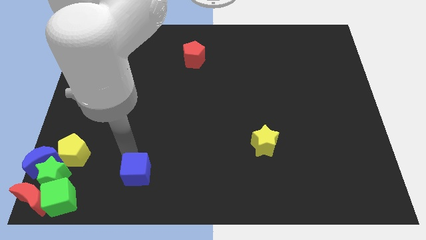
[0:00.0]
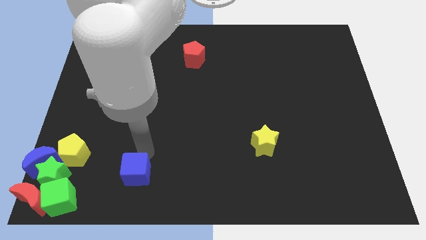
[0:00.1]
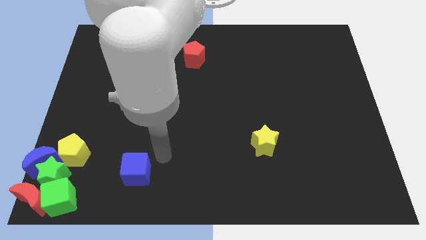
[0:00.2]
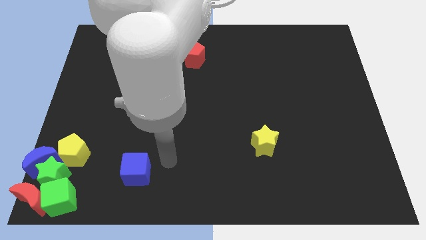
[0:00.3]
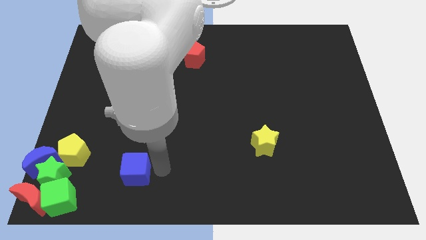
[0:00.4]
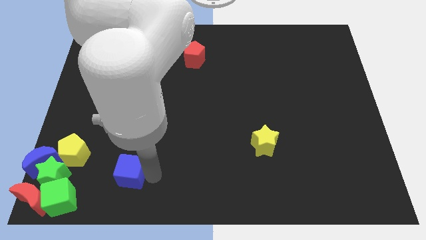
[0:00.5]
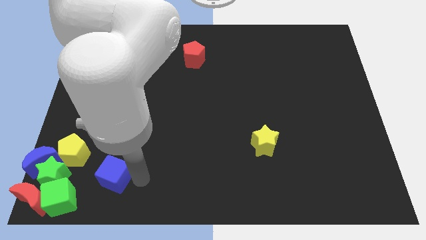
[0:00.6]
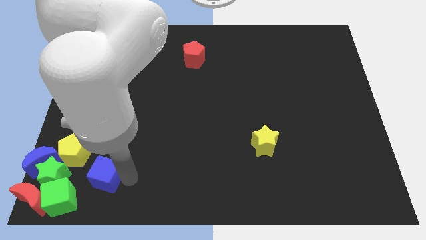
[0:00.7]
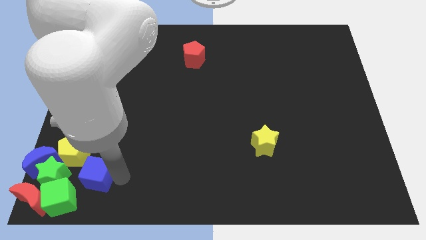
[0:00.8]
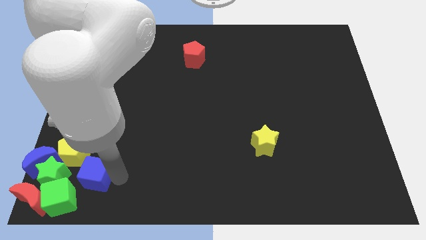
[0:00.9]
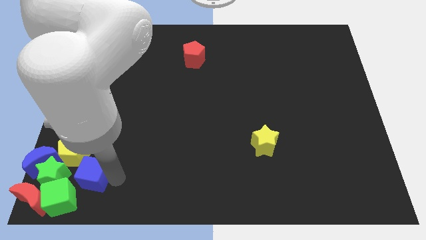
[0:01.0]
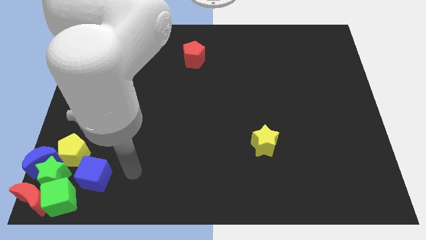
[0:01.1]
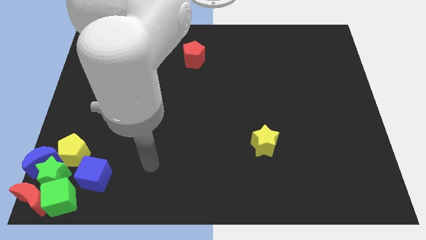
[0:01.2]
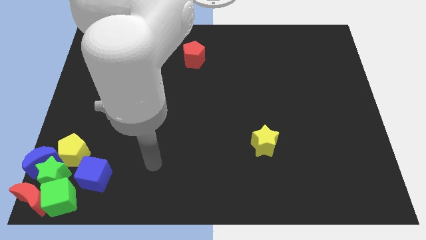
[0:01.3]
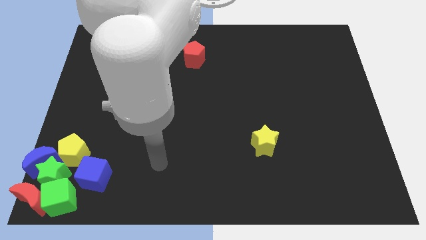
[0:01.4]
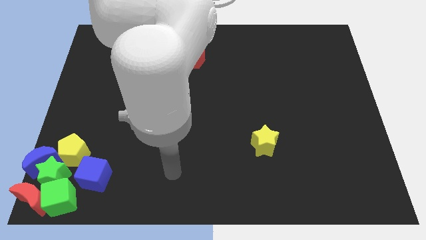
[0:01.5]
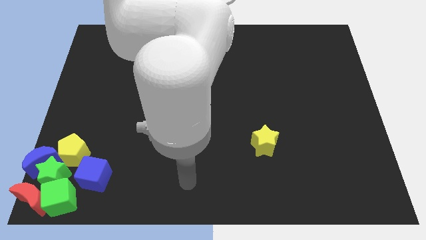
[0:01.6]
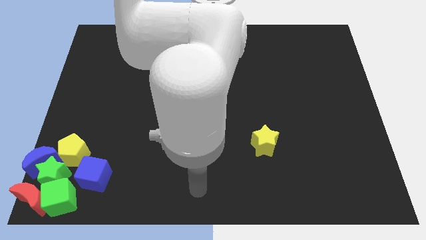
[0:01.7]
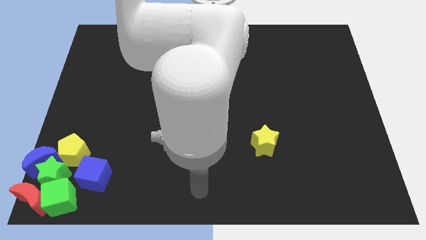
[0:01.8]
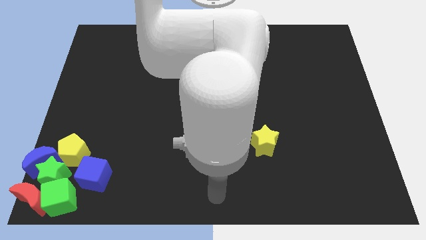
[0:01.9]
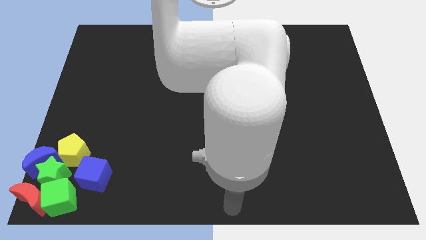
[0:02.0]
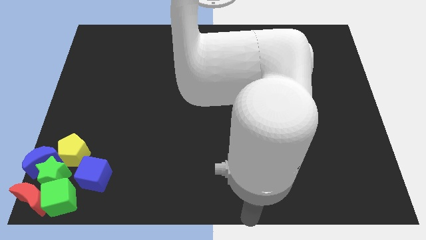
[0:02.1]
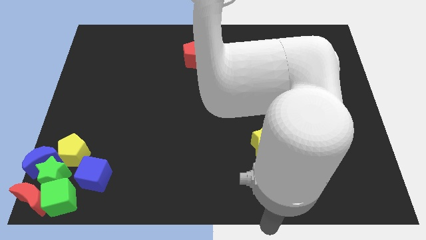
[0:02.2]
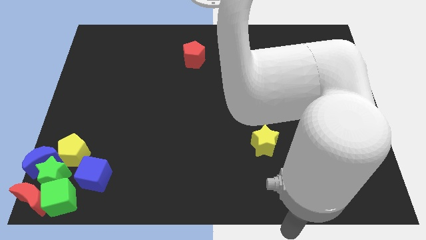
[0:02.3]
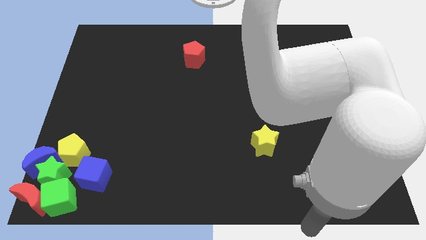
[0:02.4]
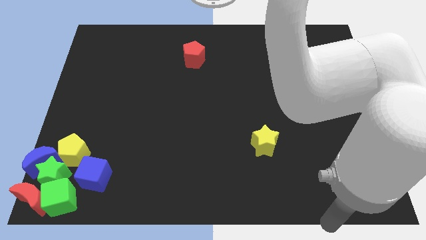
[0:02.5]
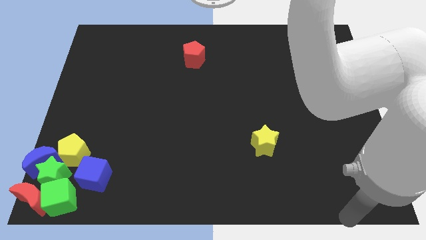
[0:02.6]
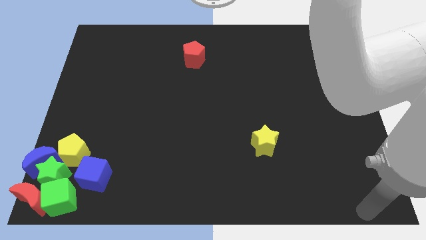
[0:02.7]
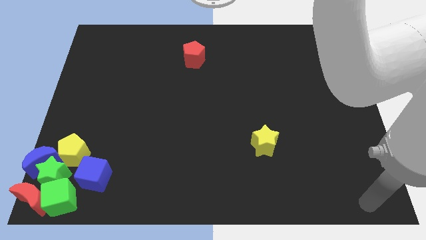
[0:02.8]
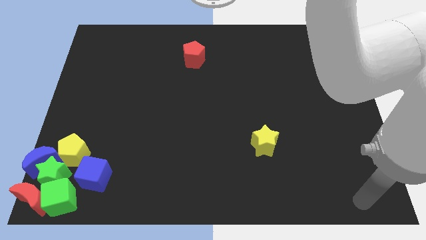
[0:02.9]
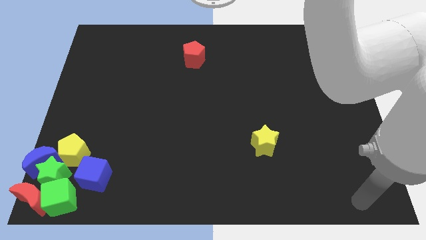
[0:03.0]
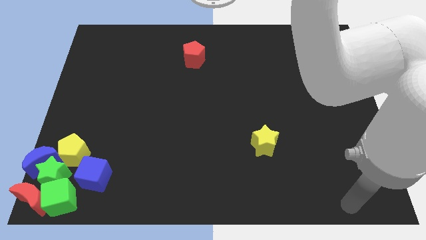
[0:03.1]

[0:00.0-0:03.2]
place the arm to the bottom left of the board

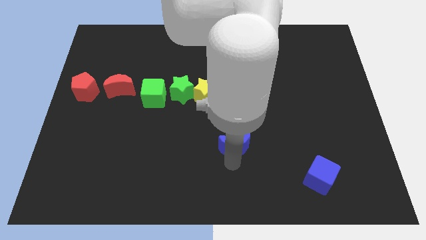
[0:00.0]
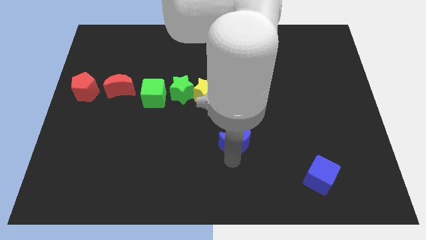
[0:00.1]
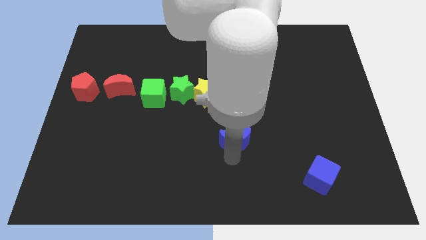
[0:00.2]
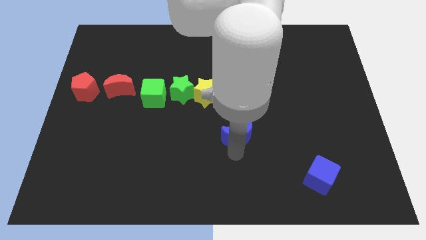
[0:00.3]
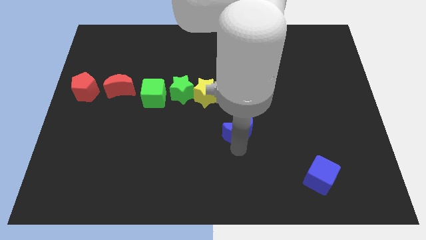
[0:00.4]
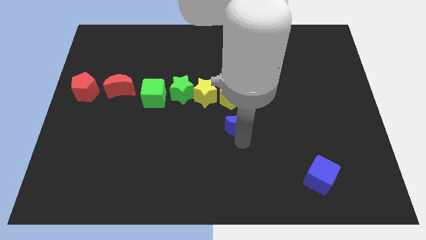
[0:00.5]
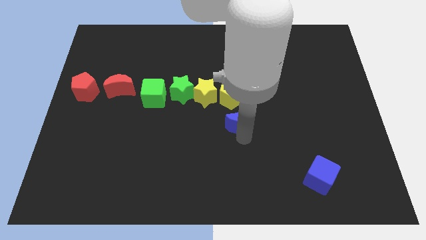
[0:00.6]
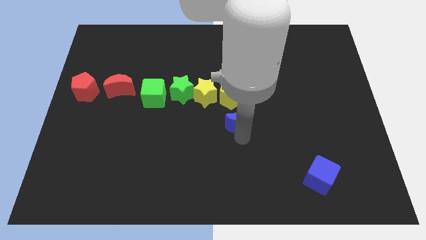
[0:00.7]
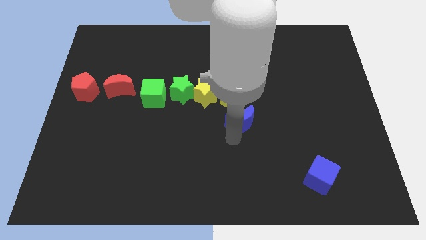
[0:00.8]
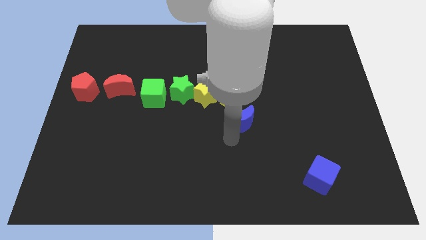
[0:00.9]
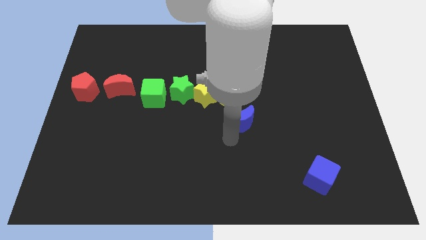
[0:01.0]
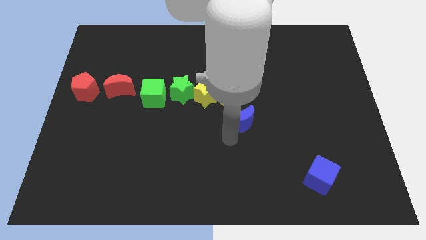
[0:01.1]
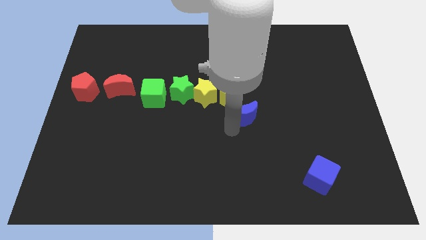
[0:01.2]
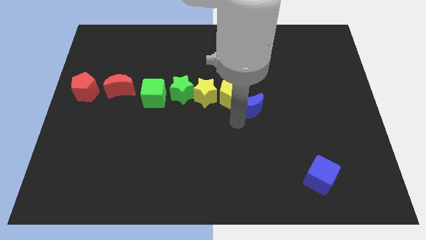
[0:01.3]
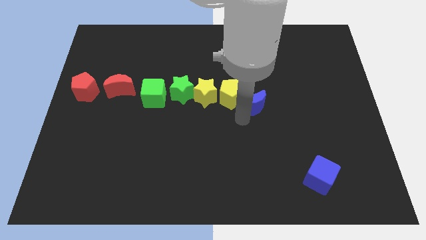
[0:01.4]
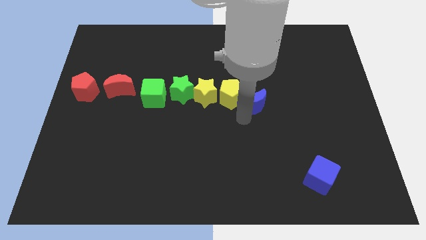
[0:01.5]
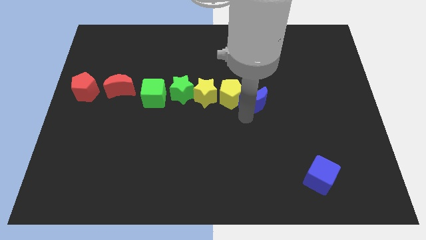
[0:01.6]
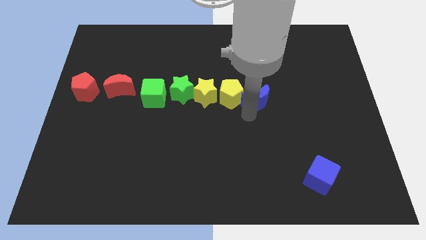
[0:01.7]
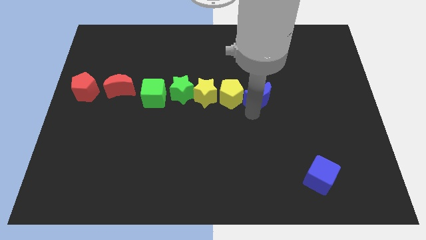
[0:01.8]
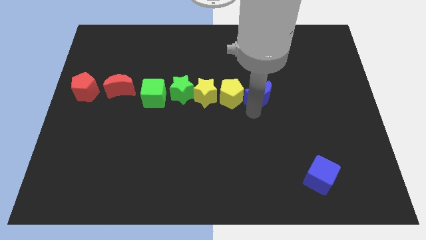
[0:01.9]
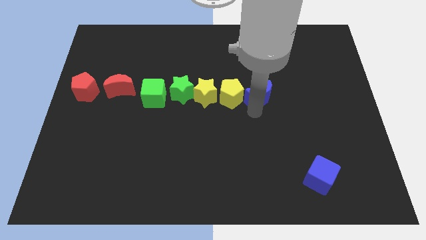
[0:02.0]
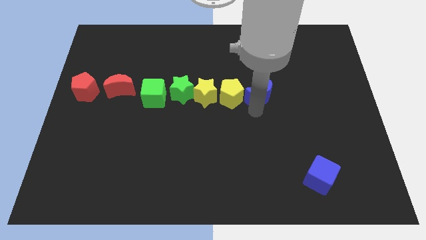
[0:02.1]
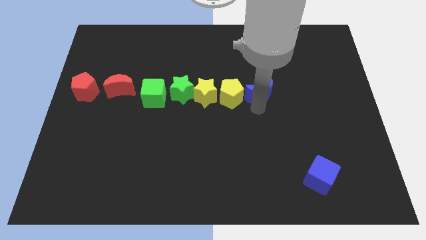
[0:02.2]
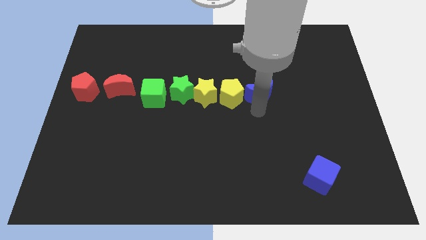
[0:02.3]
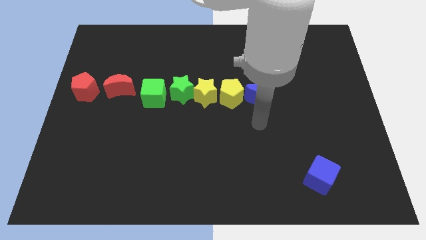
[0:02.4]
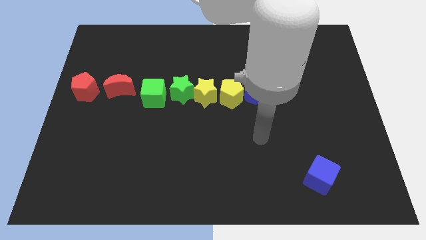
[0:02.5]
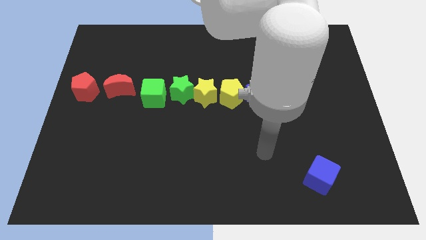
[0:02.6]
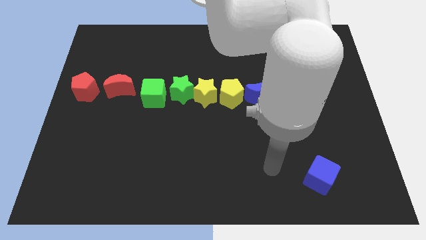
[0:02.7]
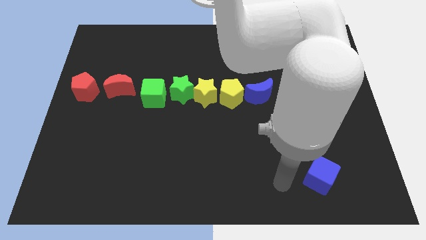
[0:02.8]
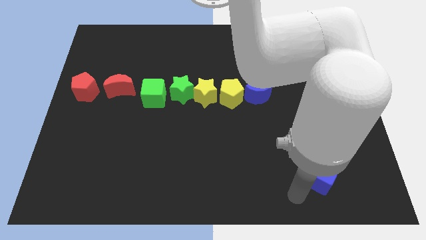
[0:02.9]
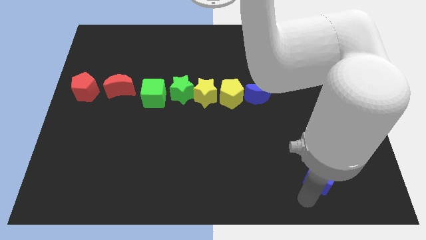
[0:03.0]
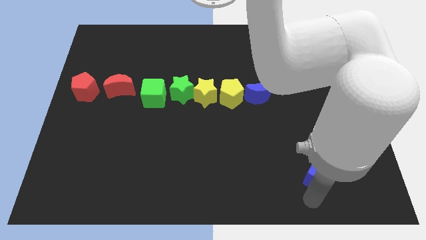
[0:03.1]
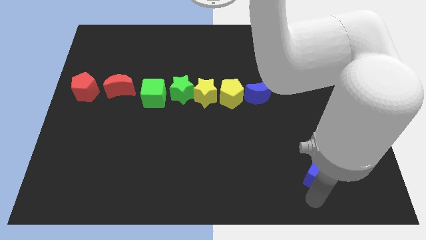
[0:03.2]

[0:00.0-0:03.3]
move the blue crescent to the right side of the yellow pentagon

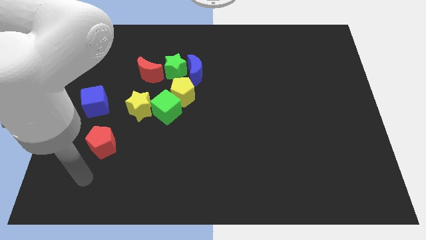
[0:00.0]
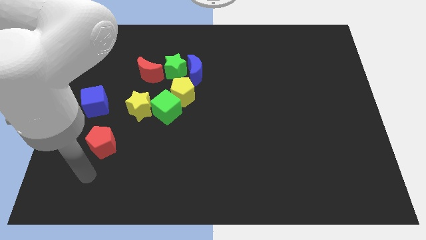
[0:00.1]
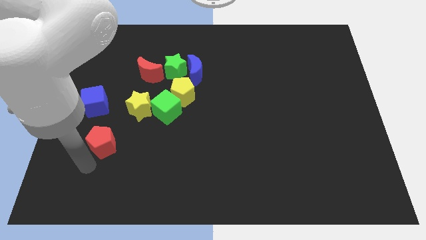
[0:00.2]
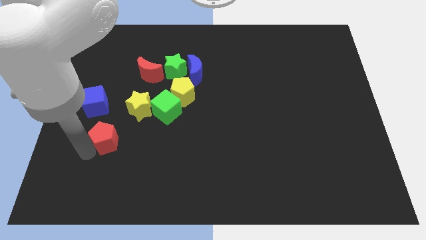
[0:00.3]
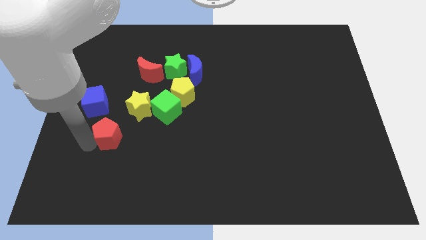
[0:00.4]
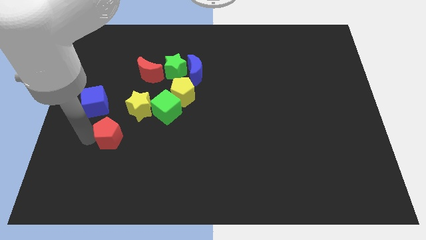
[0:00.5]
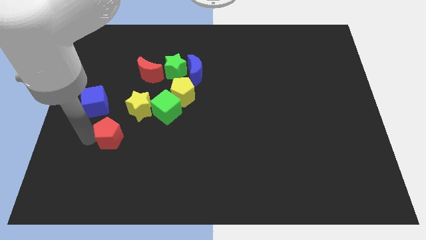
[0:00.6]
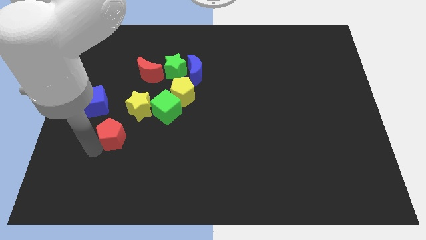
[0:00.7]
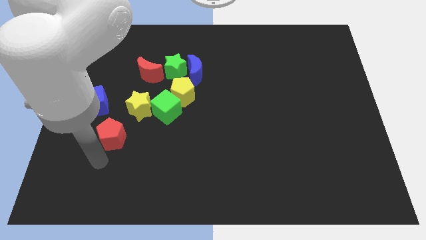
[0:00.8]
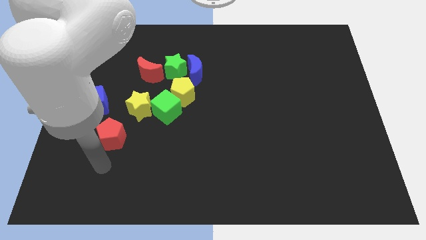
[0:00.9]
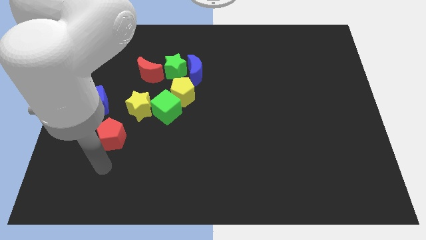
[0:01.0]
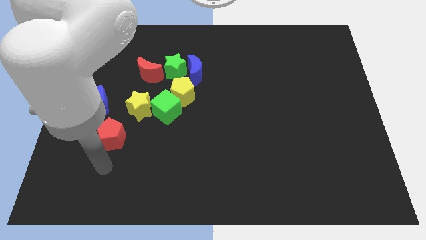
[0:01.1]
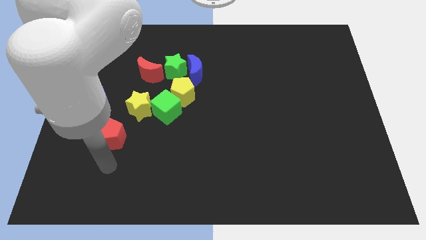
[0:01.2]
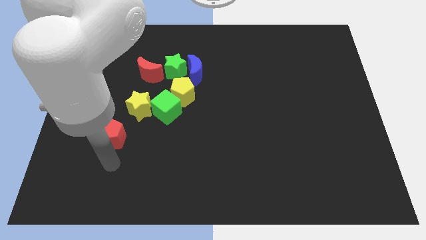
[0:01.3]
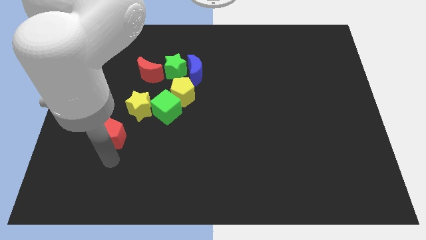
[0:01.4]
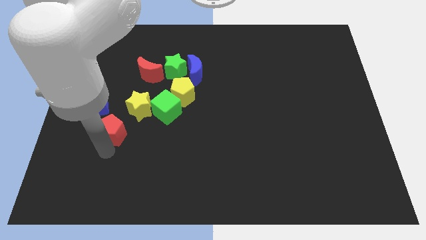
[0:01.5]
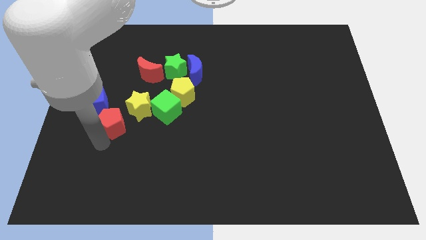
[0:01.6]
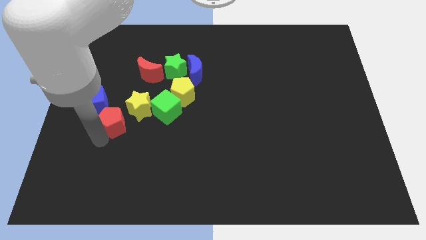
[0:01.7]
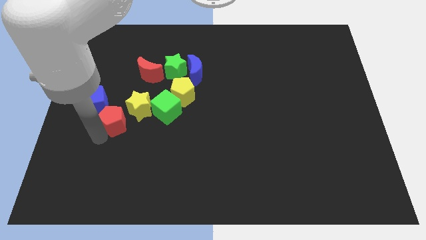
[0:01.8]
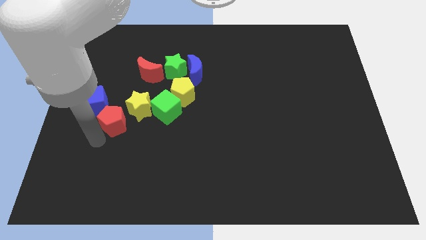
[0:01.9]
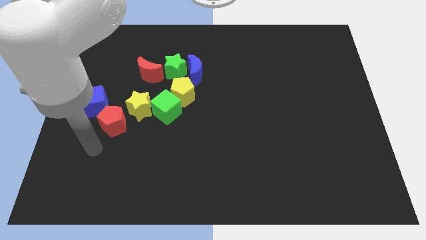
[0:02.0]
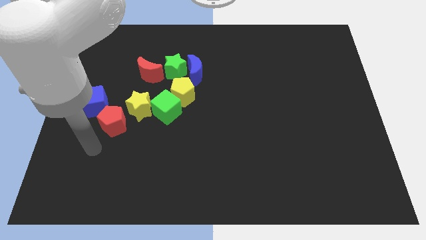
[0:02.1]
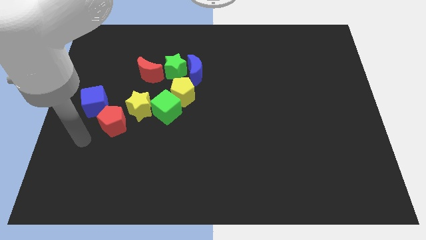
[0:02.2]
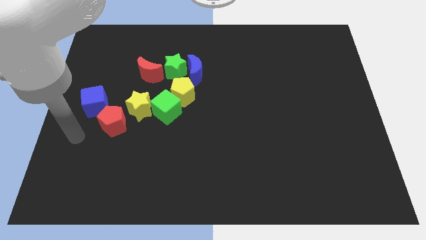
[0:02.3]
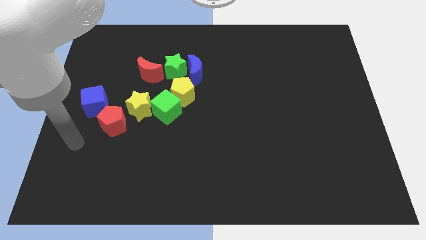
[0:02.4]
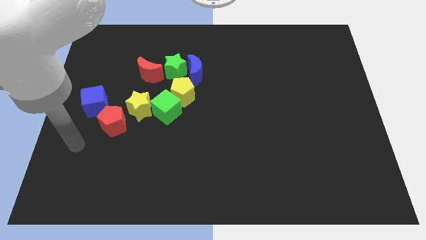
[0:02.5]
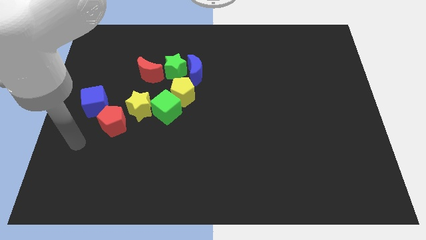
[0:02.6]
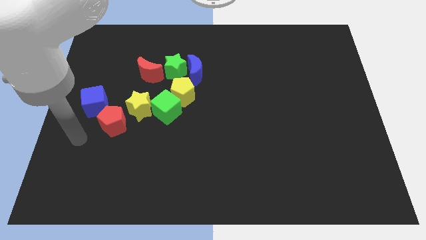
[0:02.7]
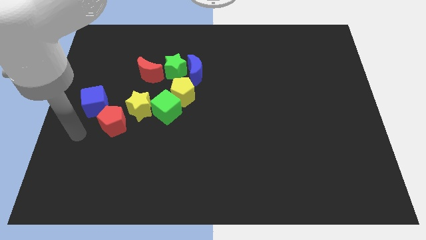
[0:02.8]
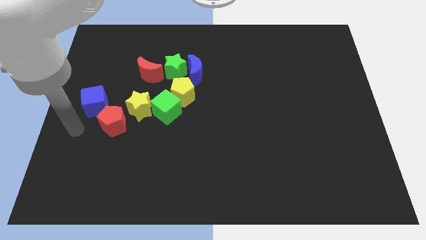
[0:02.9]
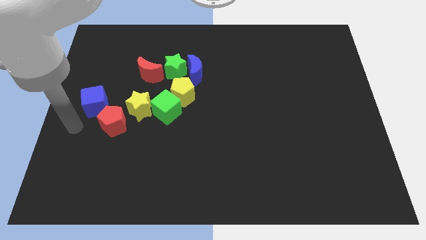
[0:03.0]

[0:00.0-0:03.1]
move the red pentagon close to the blue cube
